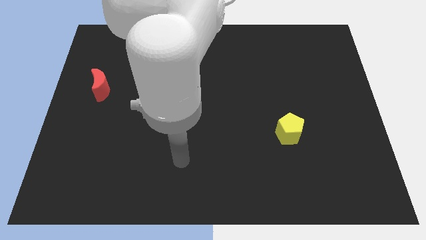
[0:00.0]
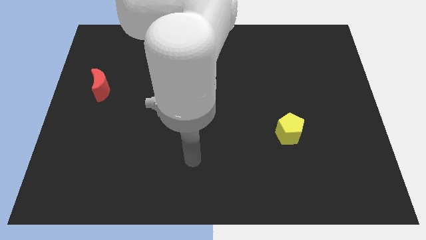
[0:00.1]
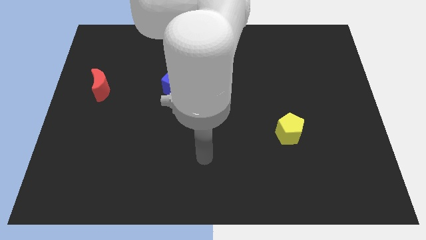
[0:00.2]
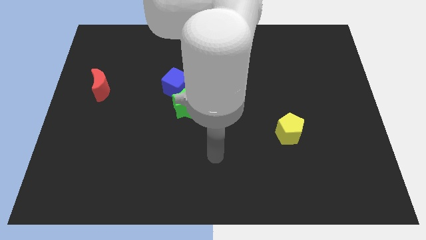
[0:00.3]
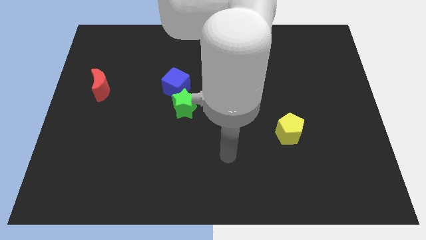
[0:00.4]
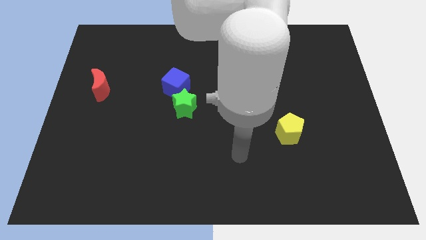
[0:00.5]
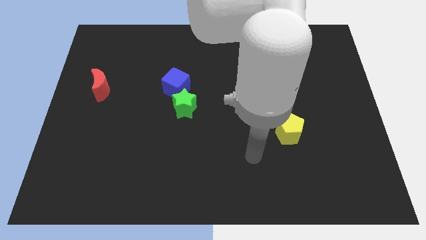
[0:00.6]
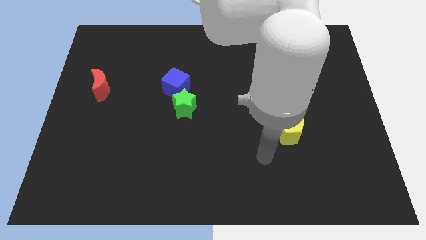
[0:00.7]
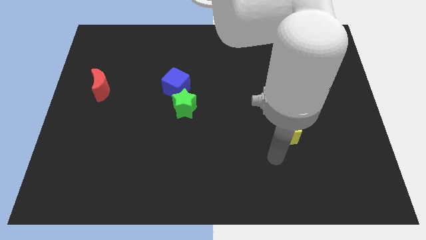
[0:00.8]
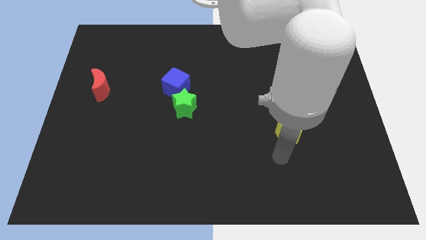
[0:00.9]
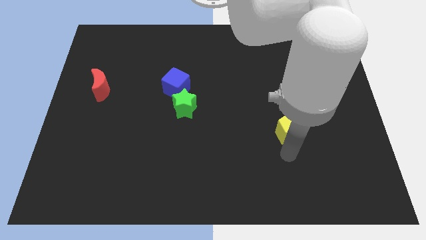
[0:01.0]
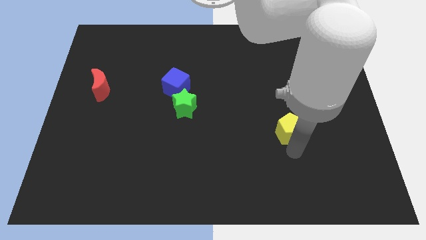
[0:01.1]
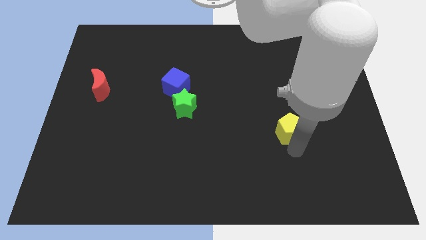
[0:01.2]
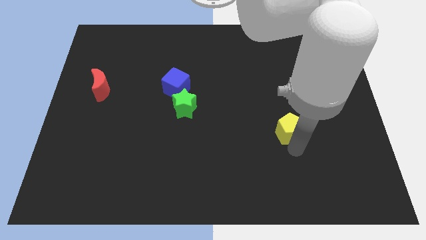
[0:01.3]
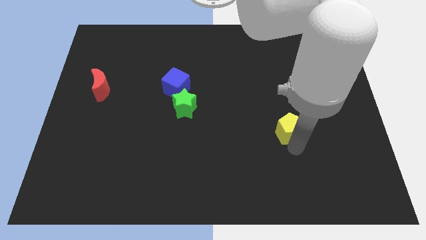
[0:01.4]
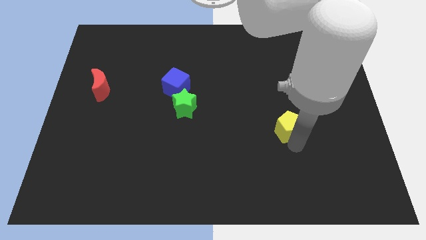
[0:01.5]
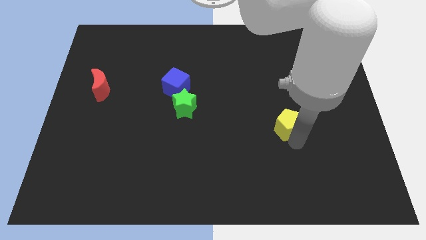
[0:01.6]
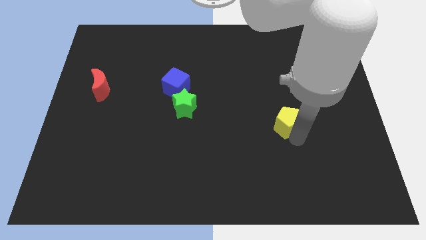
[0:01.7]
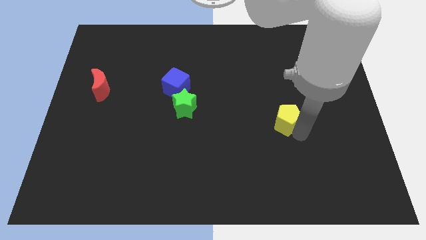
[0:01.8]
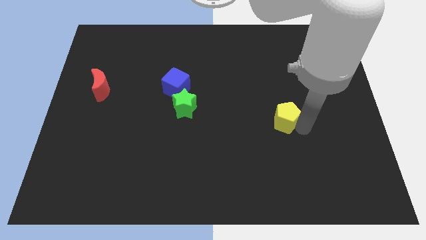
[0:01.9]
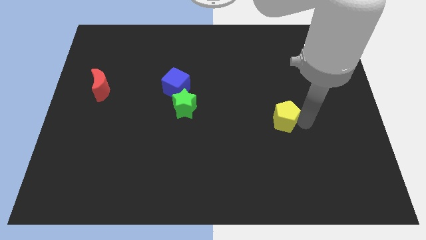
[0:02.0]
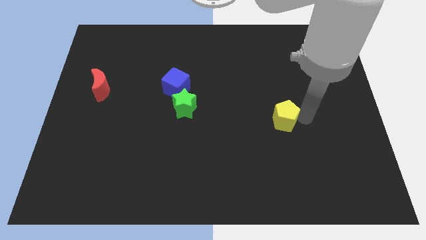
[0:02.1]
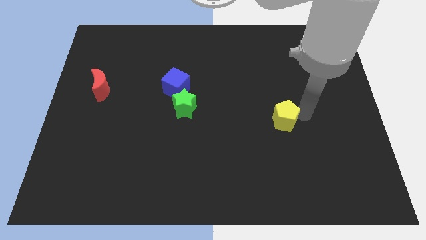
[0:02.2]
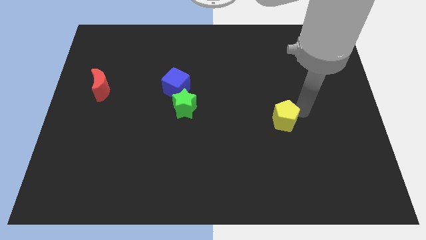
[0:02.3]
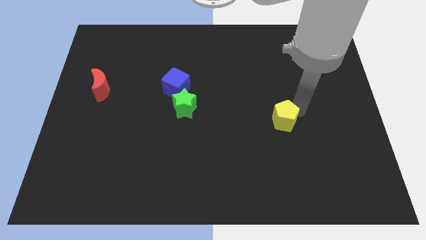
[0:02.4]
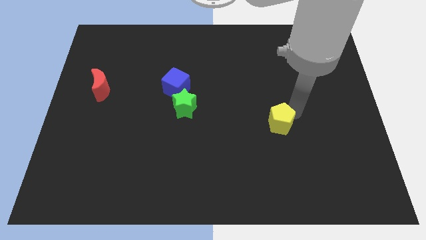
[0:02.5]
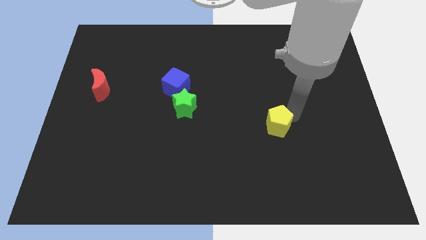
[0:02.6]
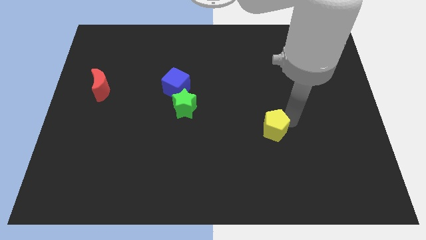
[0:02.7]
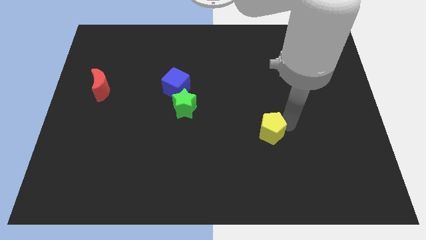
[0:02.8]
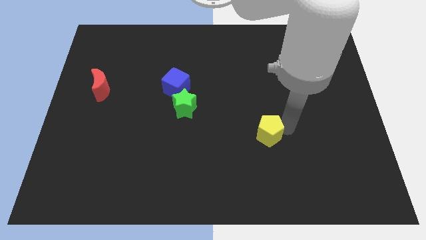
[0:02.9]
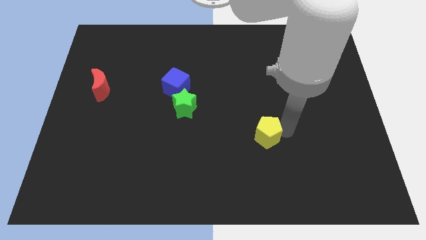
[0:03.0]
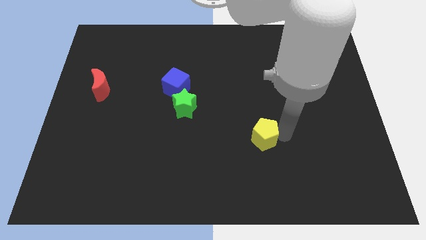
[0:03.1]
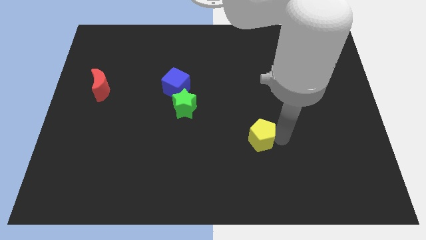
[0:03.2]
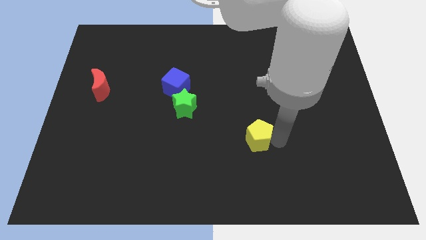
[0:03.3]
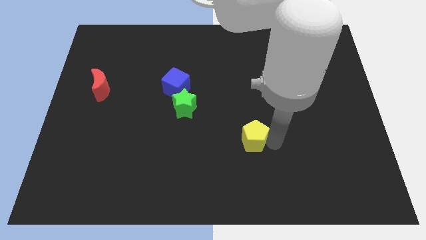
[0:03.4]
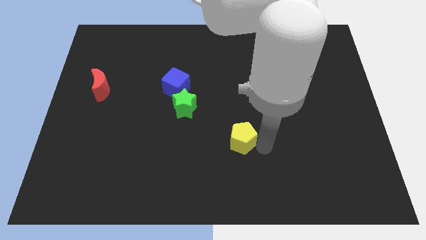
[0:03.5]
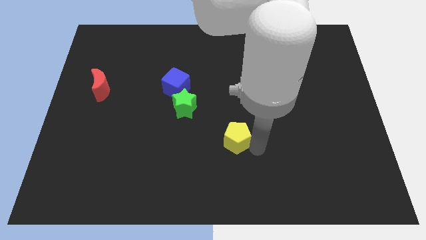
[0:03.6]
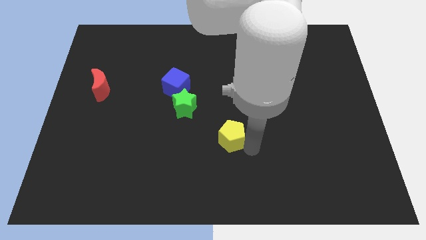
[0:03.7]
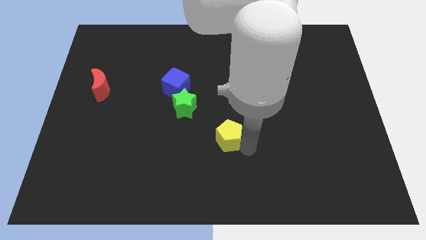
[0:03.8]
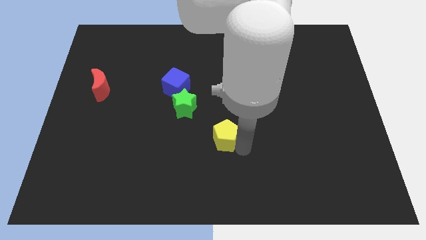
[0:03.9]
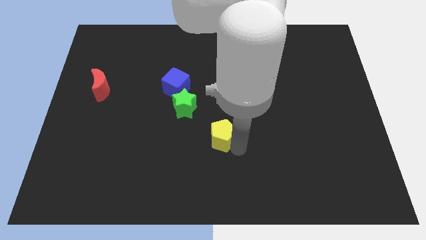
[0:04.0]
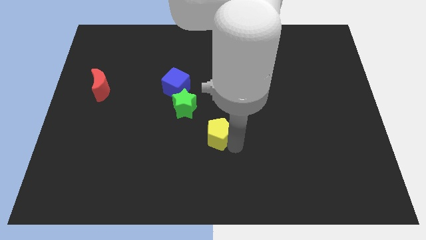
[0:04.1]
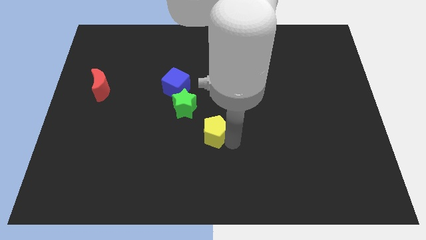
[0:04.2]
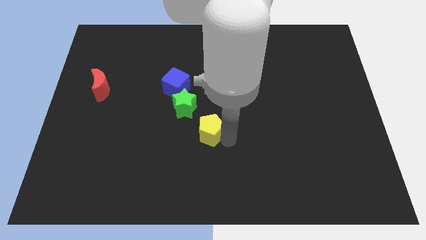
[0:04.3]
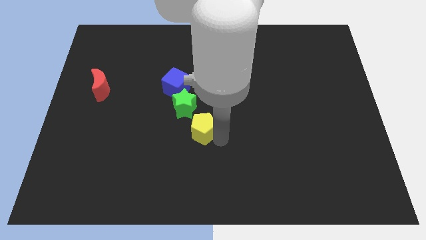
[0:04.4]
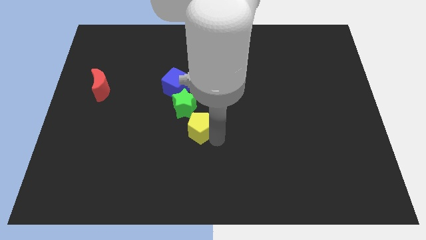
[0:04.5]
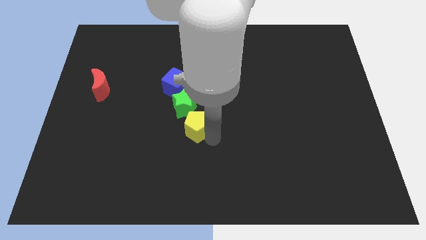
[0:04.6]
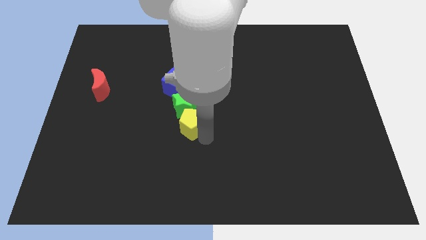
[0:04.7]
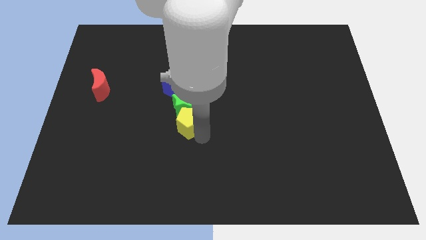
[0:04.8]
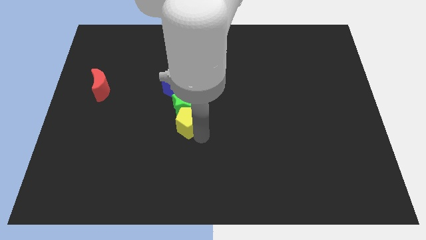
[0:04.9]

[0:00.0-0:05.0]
push the pentagon to the green block

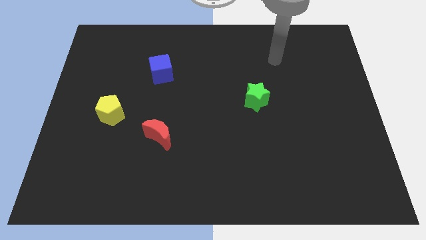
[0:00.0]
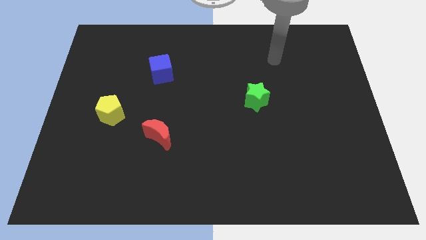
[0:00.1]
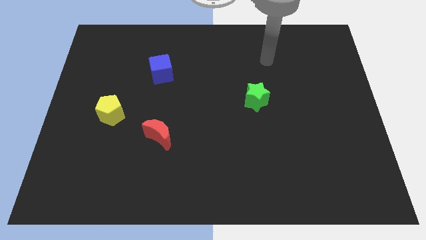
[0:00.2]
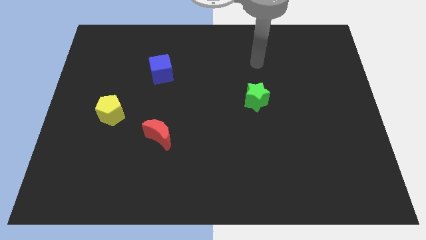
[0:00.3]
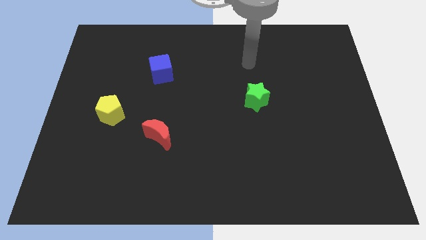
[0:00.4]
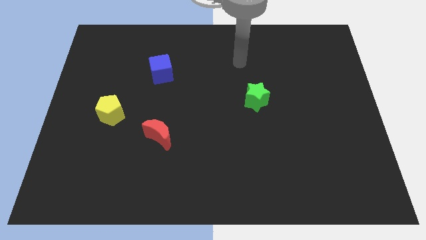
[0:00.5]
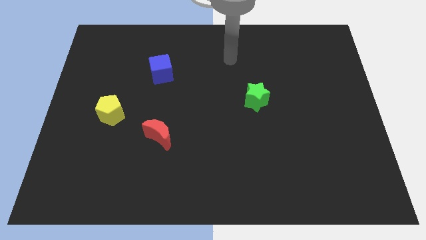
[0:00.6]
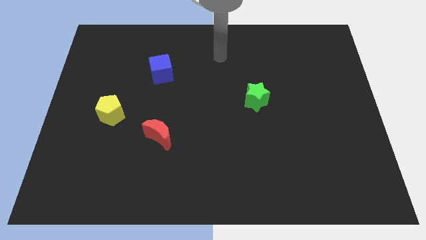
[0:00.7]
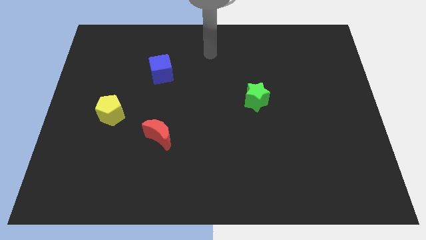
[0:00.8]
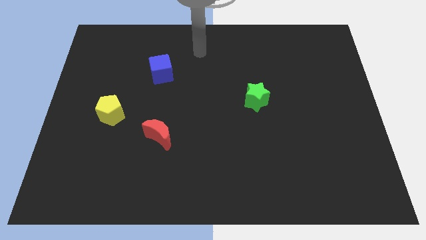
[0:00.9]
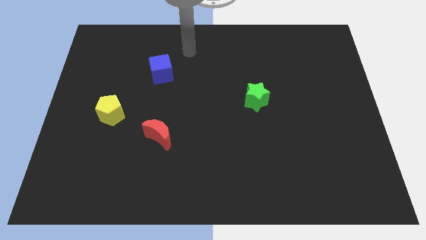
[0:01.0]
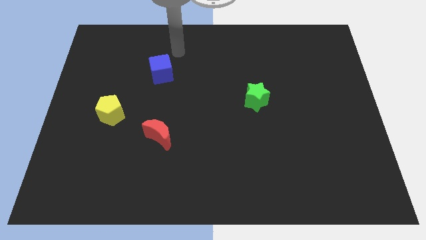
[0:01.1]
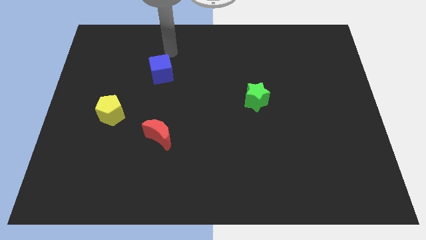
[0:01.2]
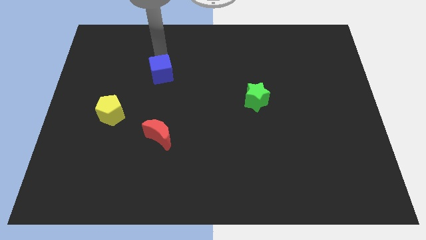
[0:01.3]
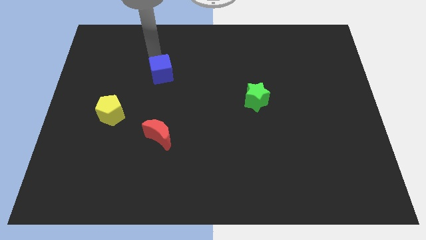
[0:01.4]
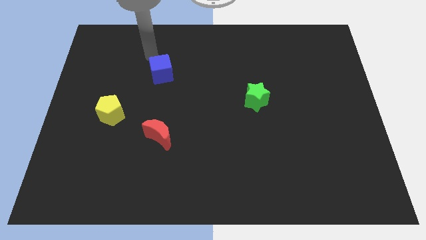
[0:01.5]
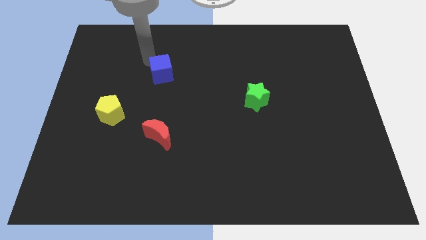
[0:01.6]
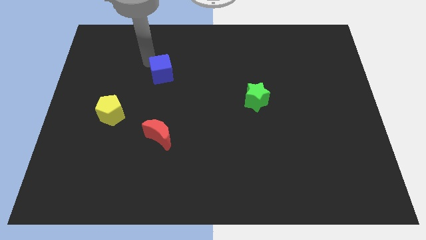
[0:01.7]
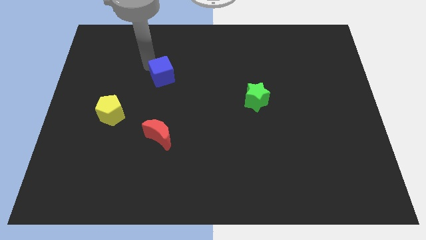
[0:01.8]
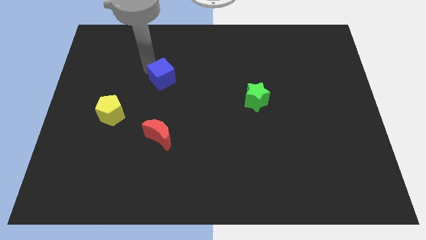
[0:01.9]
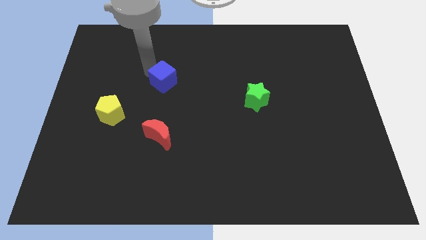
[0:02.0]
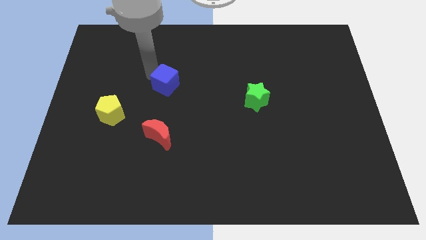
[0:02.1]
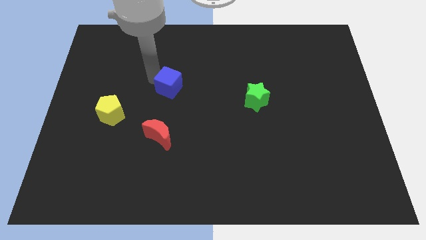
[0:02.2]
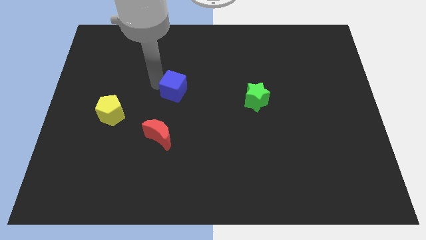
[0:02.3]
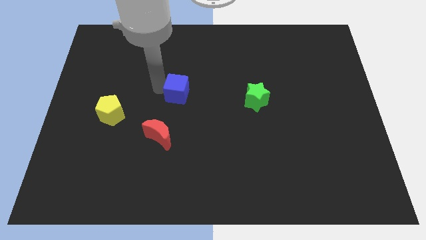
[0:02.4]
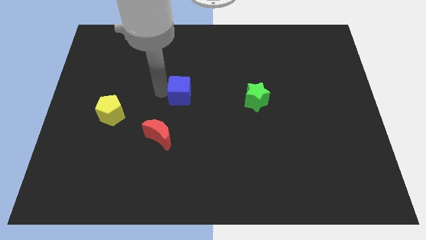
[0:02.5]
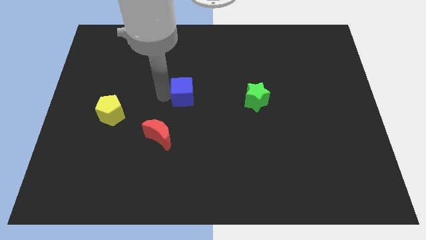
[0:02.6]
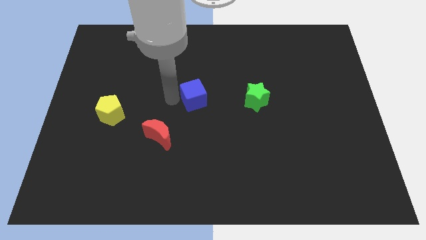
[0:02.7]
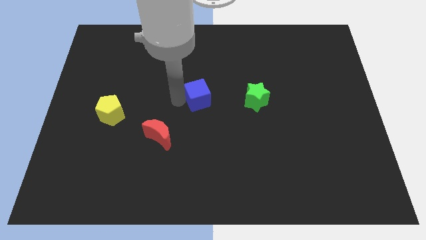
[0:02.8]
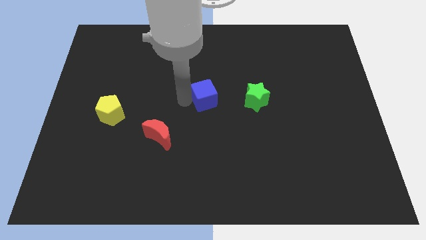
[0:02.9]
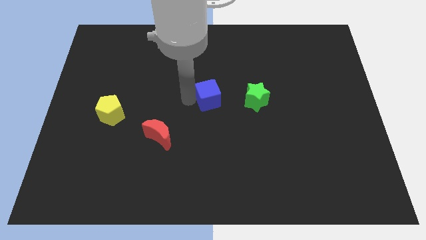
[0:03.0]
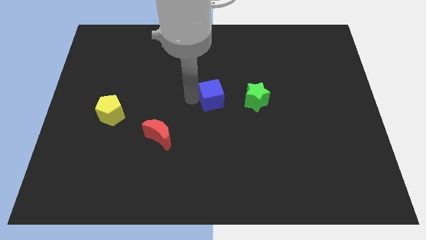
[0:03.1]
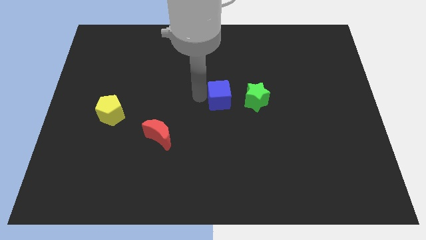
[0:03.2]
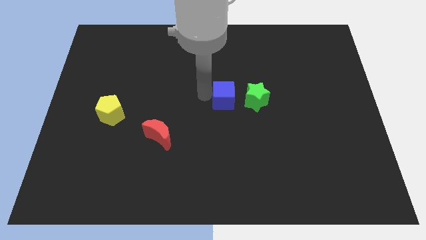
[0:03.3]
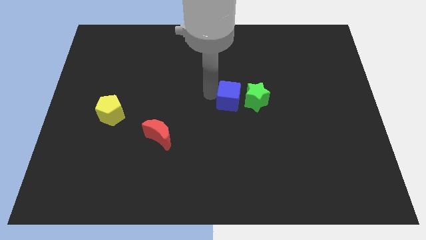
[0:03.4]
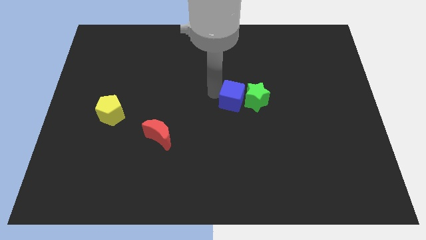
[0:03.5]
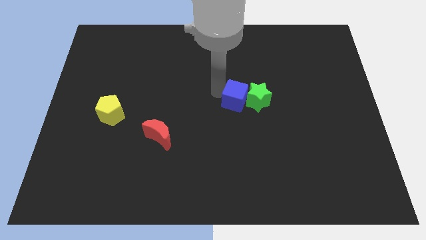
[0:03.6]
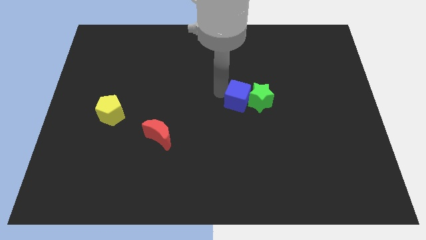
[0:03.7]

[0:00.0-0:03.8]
slide the blue cube to the green star
